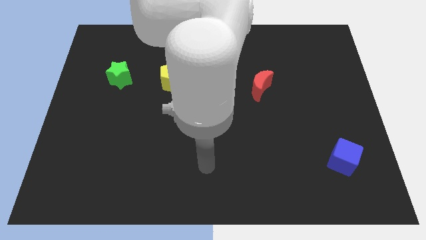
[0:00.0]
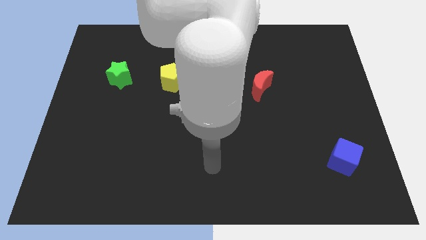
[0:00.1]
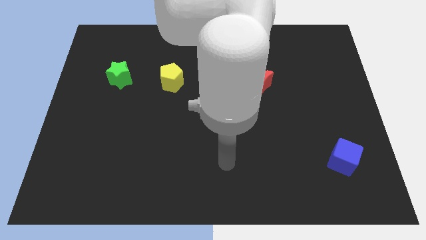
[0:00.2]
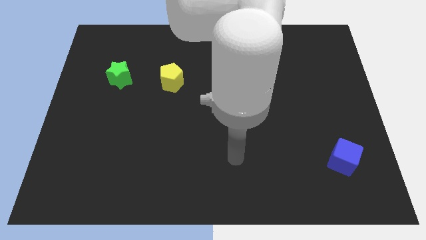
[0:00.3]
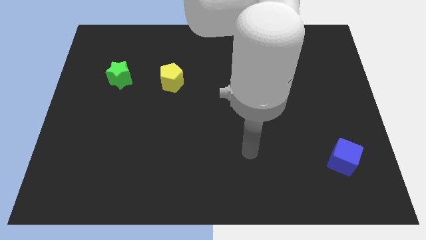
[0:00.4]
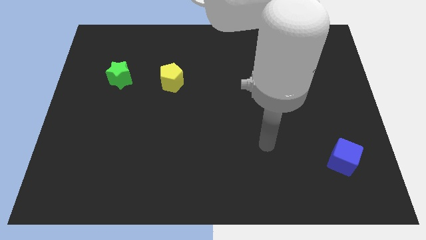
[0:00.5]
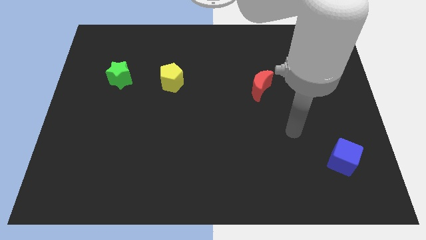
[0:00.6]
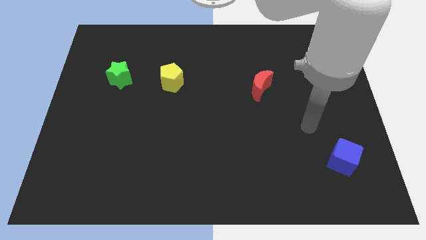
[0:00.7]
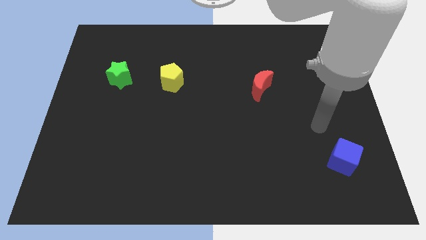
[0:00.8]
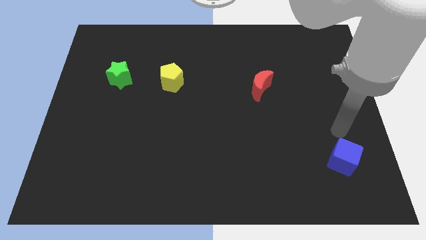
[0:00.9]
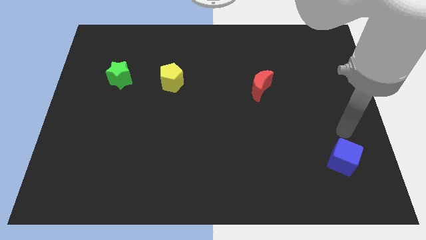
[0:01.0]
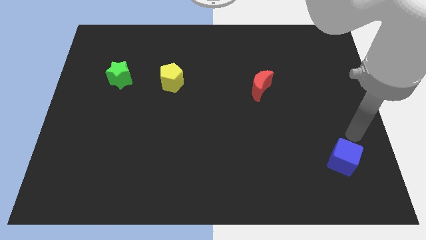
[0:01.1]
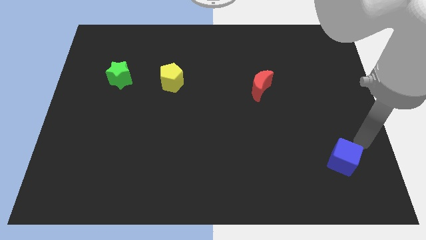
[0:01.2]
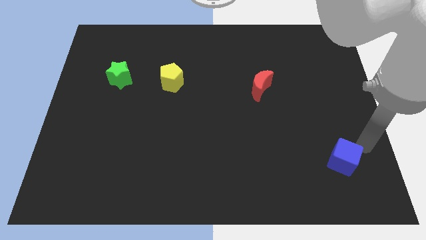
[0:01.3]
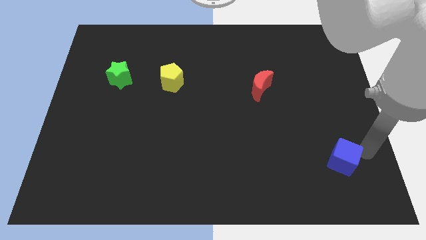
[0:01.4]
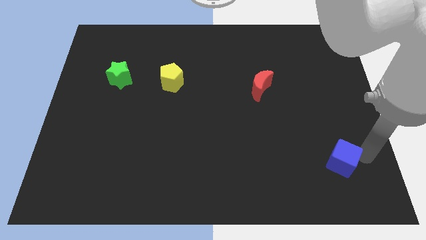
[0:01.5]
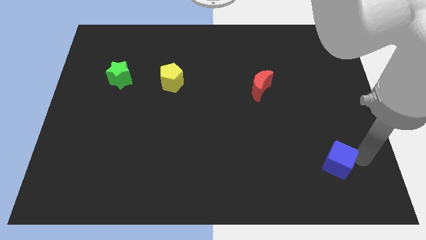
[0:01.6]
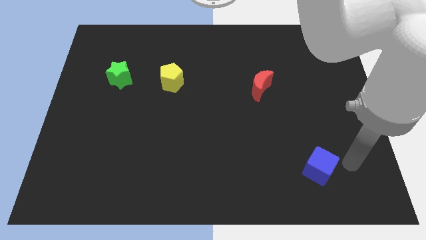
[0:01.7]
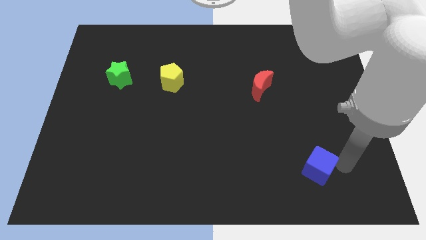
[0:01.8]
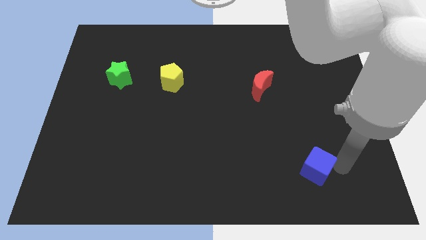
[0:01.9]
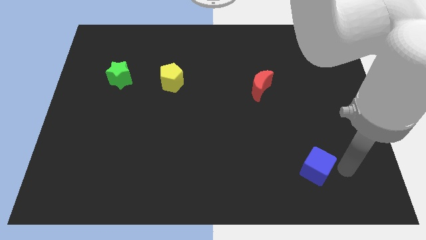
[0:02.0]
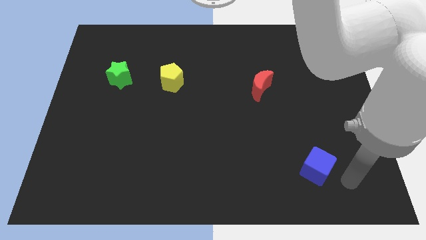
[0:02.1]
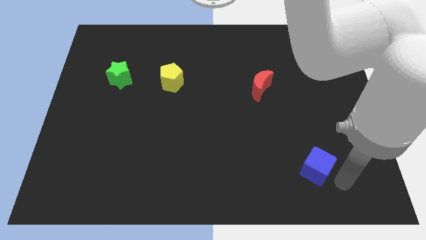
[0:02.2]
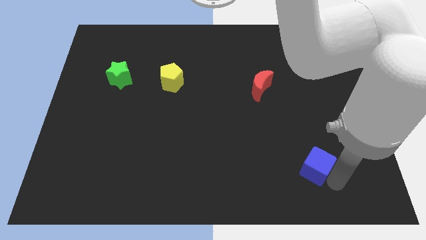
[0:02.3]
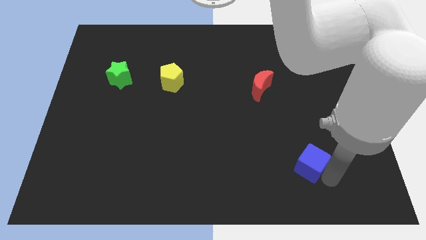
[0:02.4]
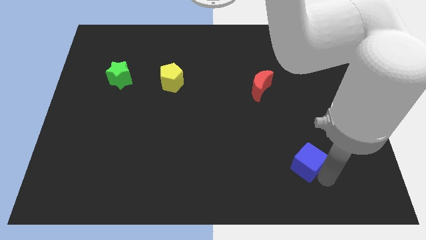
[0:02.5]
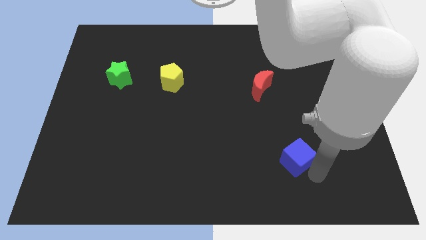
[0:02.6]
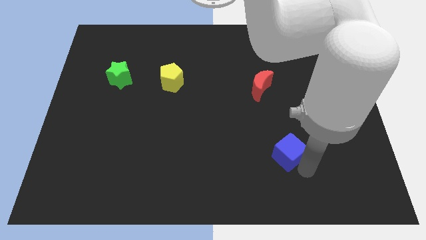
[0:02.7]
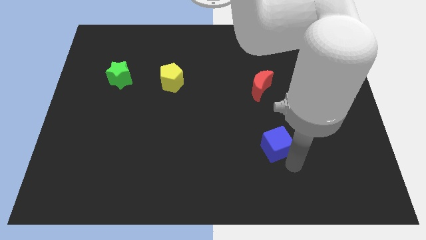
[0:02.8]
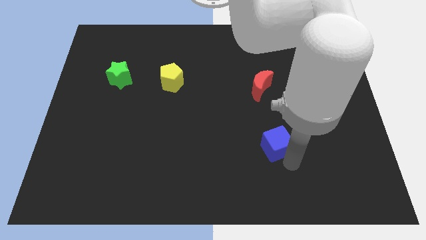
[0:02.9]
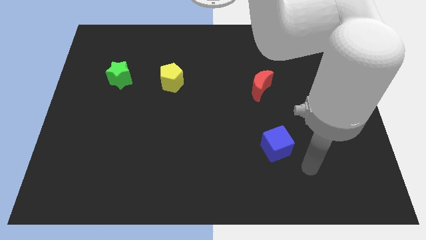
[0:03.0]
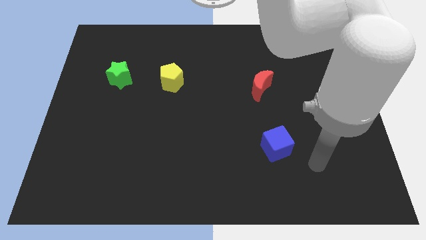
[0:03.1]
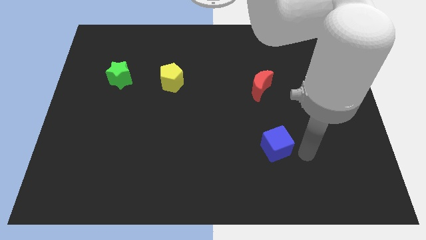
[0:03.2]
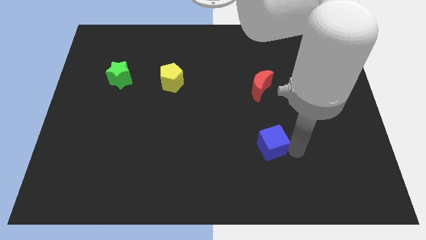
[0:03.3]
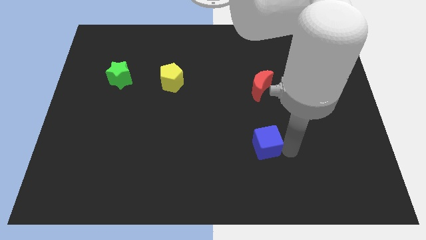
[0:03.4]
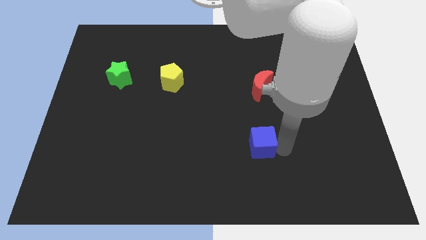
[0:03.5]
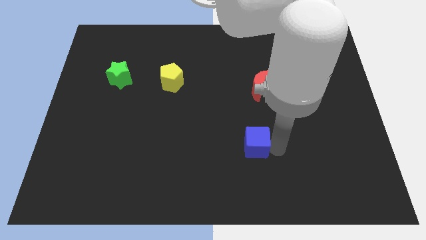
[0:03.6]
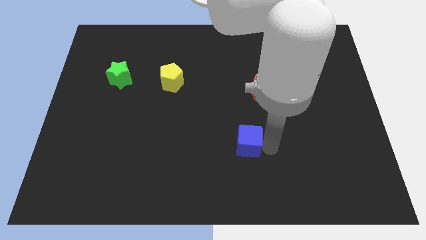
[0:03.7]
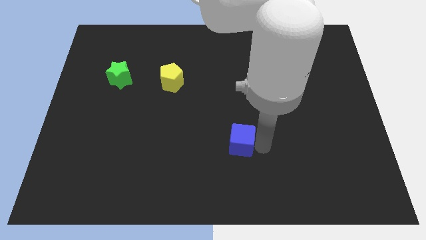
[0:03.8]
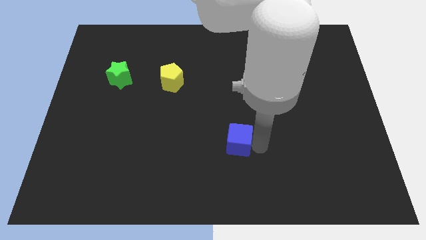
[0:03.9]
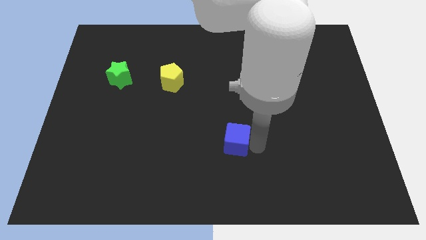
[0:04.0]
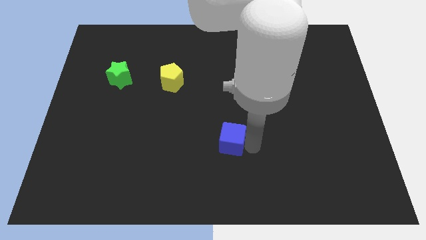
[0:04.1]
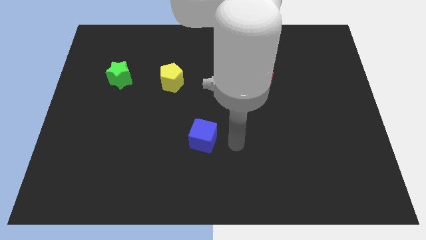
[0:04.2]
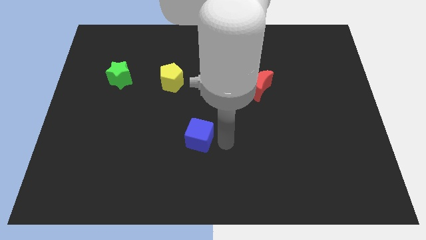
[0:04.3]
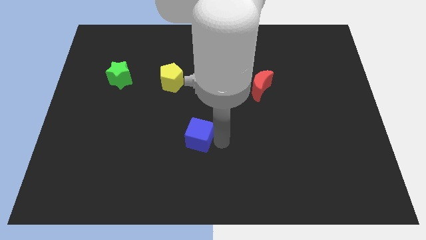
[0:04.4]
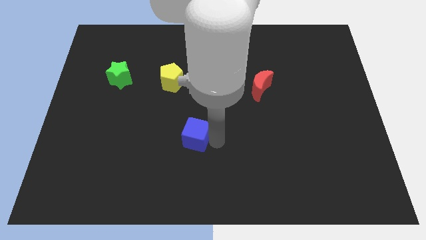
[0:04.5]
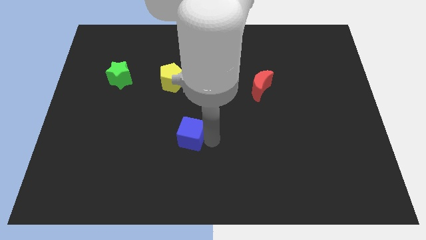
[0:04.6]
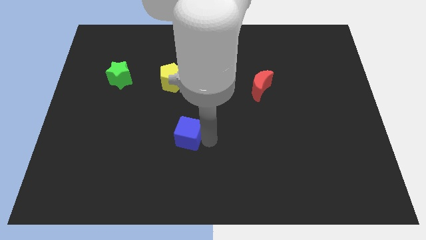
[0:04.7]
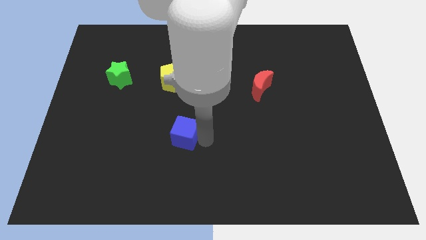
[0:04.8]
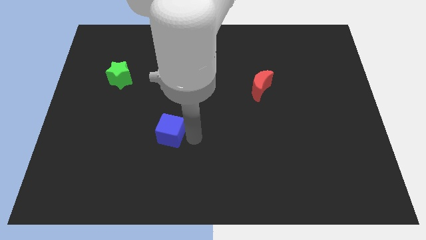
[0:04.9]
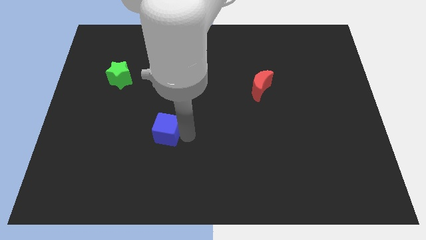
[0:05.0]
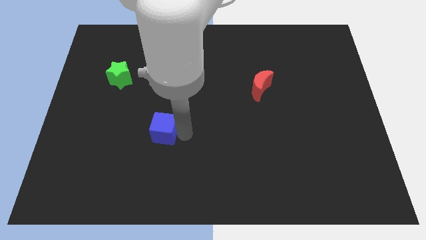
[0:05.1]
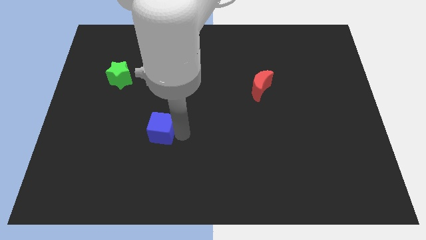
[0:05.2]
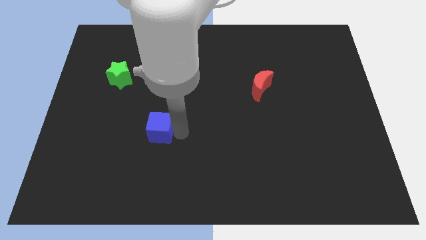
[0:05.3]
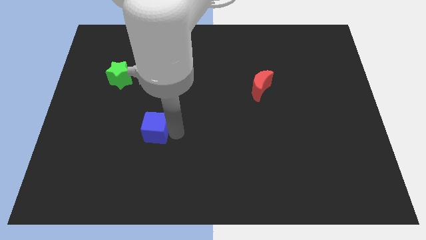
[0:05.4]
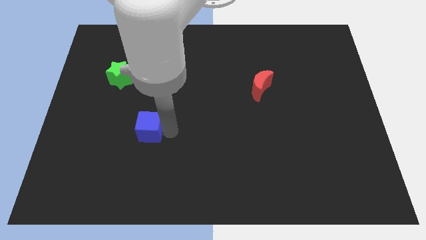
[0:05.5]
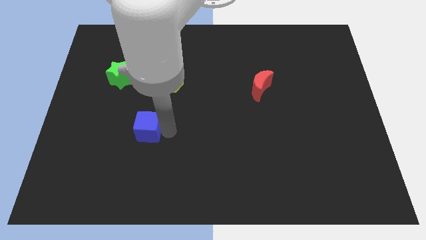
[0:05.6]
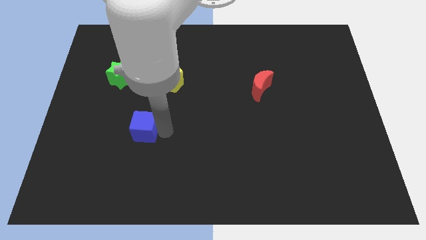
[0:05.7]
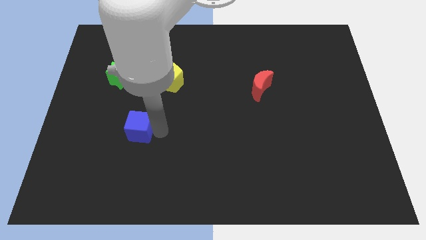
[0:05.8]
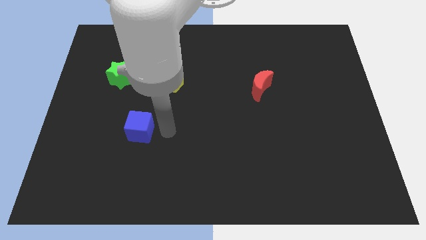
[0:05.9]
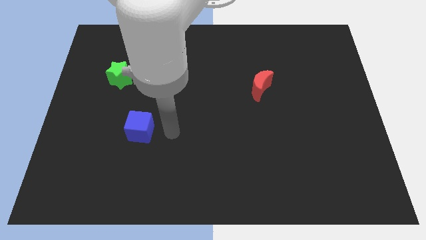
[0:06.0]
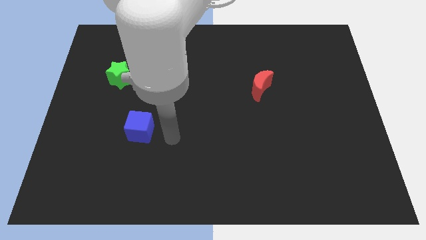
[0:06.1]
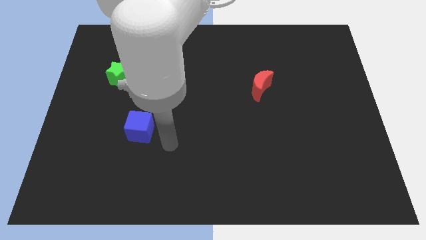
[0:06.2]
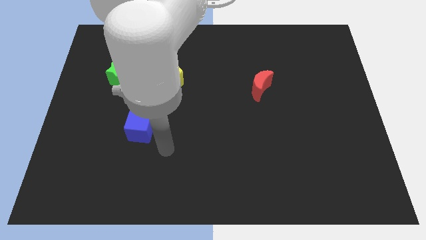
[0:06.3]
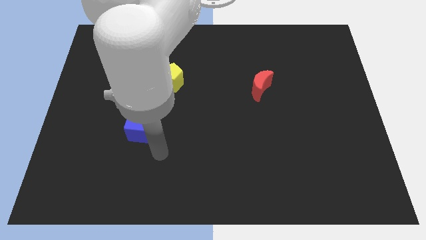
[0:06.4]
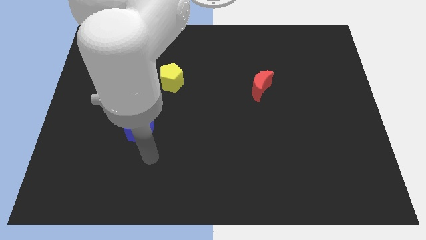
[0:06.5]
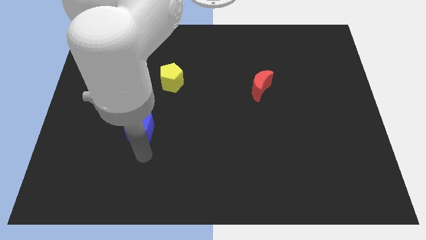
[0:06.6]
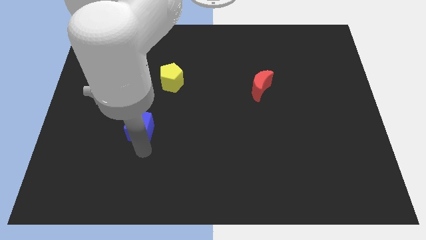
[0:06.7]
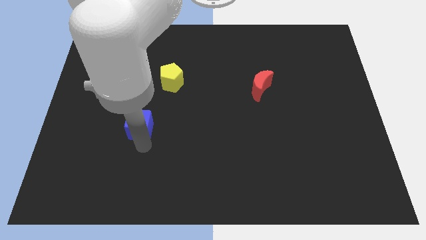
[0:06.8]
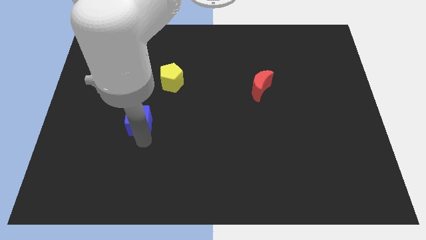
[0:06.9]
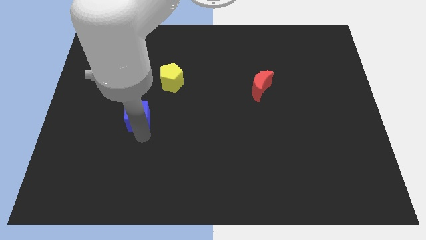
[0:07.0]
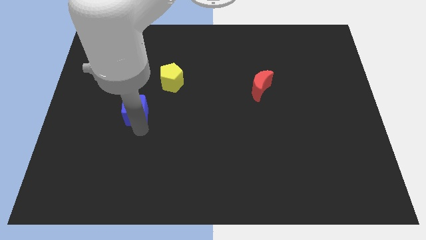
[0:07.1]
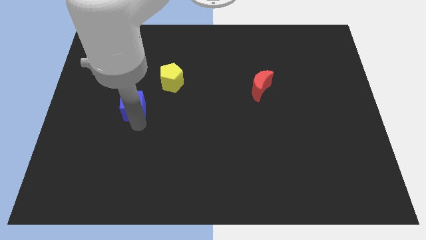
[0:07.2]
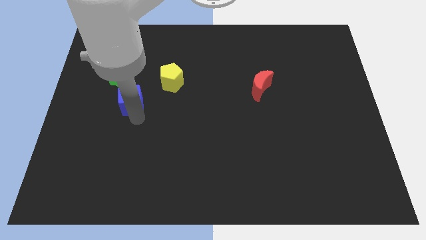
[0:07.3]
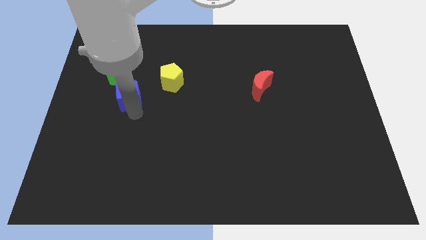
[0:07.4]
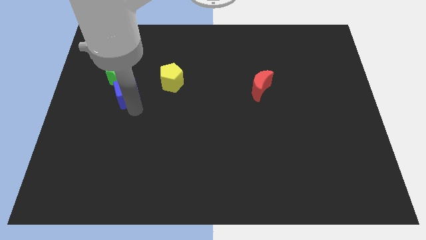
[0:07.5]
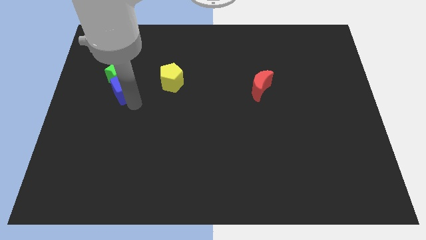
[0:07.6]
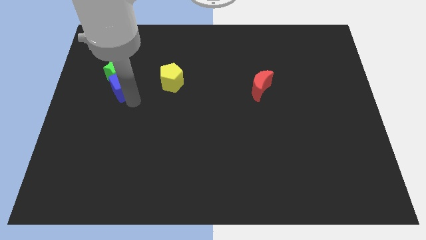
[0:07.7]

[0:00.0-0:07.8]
slide the cube next to the green star

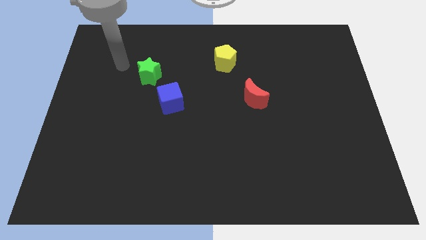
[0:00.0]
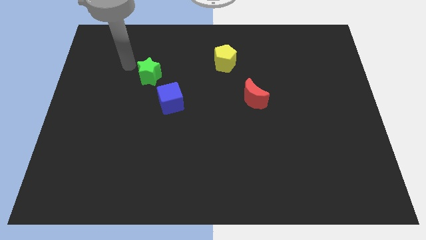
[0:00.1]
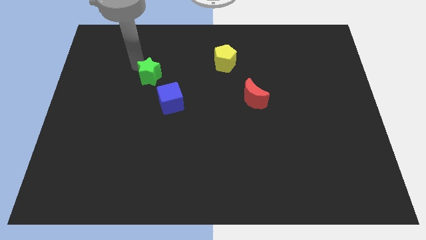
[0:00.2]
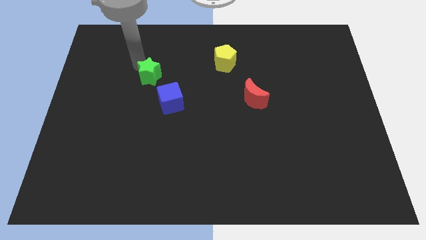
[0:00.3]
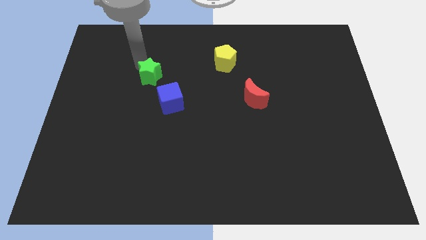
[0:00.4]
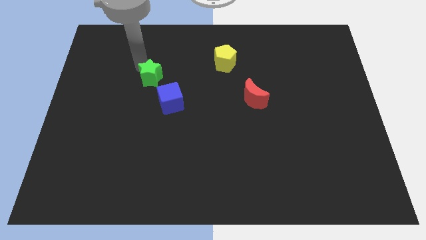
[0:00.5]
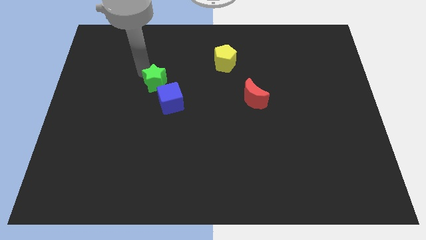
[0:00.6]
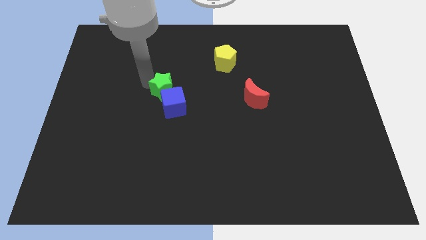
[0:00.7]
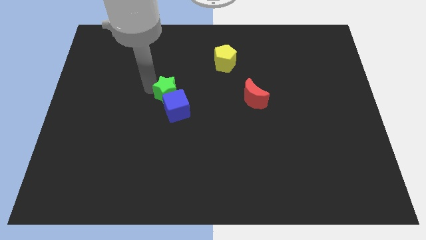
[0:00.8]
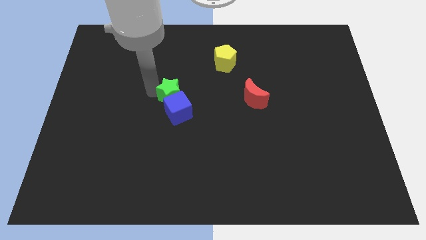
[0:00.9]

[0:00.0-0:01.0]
move the green block towards the blue cube

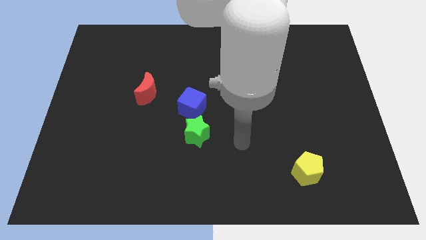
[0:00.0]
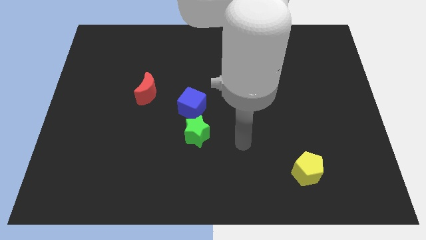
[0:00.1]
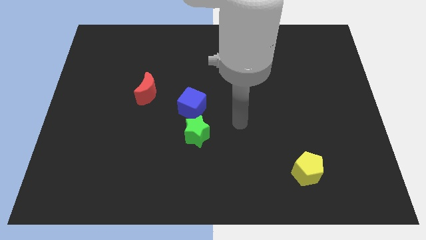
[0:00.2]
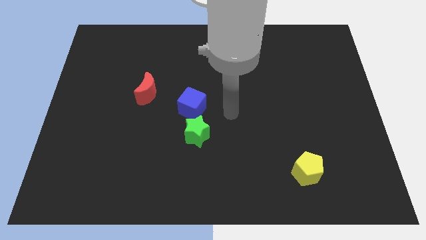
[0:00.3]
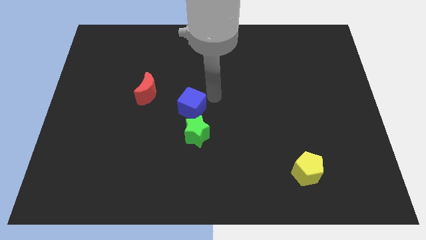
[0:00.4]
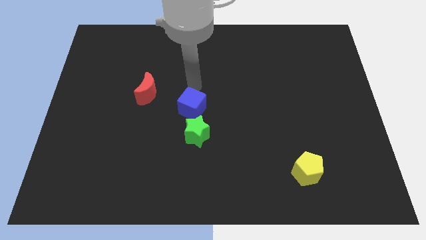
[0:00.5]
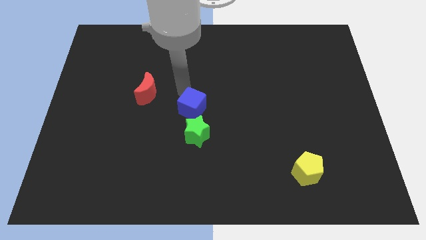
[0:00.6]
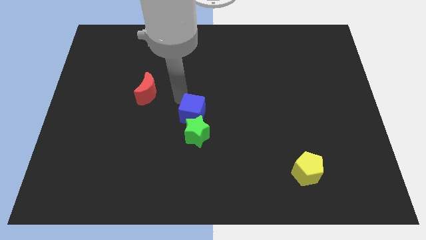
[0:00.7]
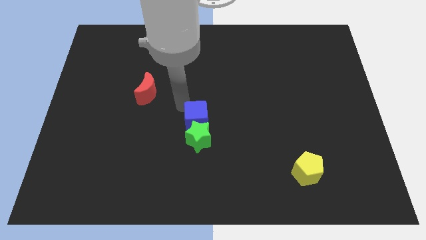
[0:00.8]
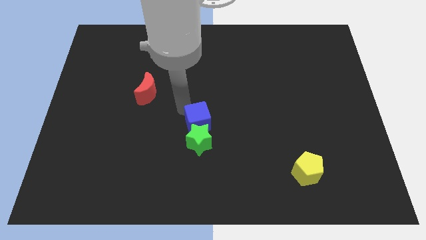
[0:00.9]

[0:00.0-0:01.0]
put the blue block to the green block
